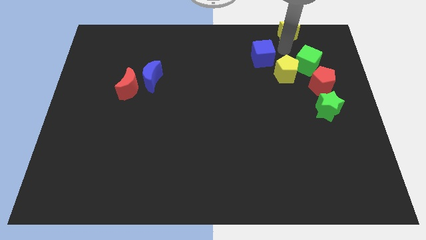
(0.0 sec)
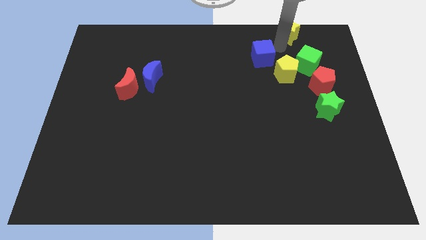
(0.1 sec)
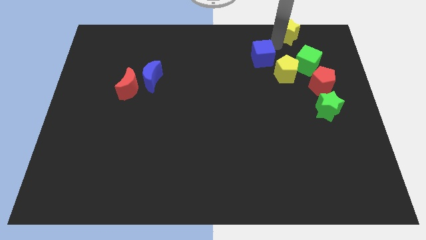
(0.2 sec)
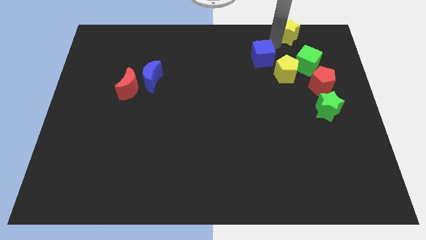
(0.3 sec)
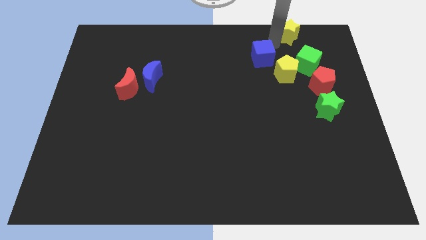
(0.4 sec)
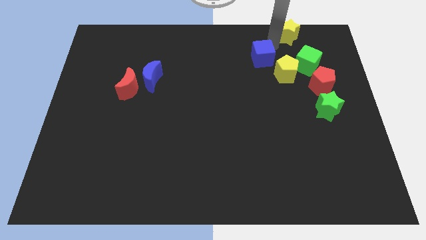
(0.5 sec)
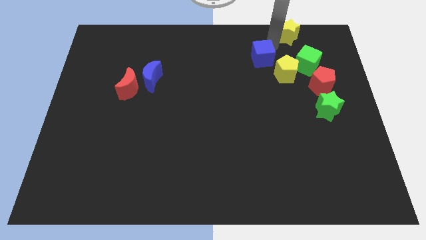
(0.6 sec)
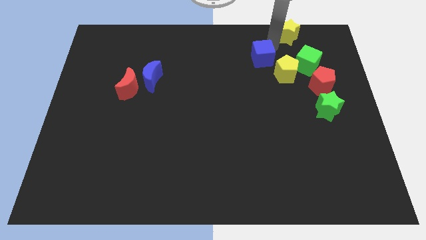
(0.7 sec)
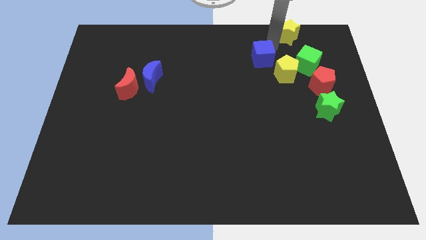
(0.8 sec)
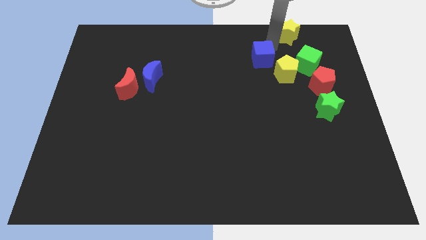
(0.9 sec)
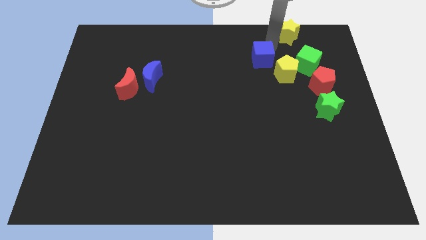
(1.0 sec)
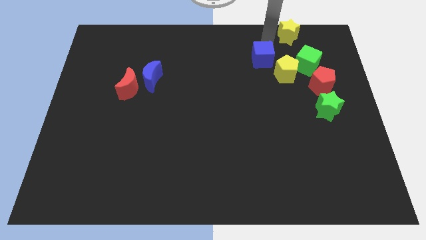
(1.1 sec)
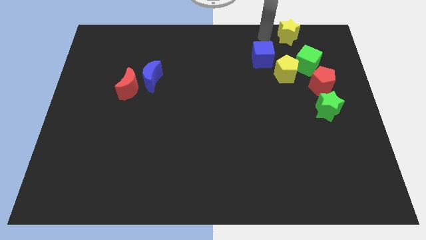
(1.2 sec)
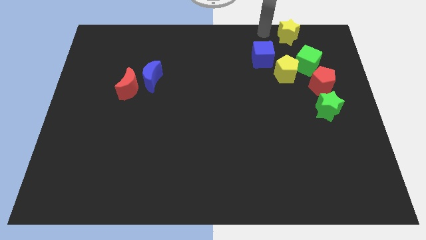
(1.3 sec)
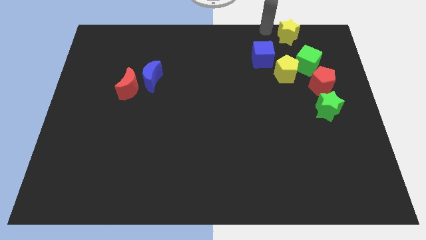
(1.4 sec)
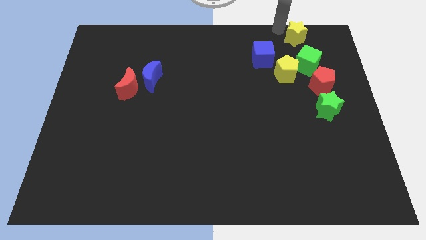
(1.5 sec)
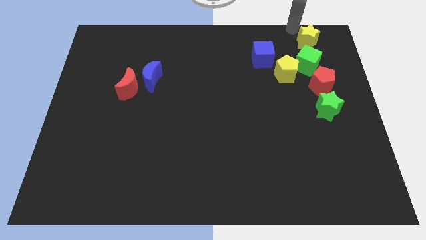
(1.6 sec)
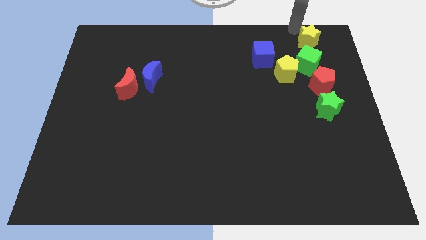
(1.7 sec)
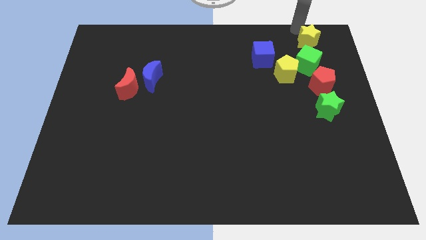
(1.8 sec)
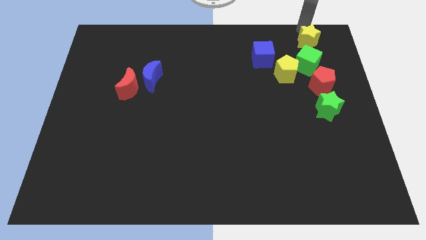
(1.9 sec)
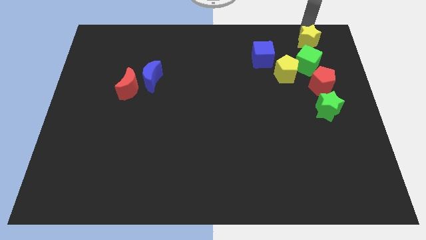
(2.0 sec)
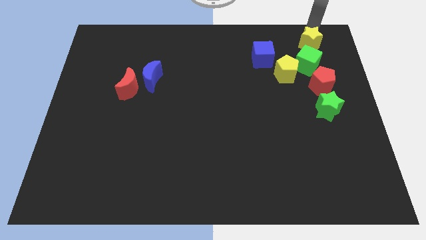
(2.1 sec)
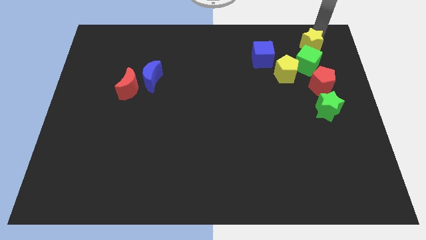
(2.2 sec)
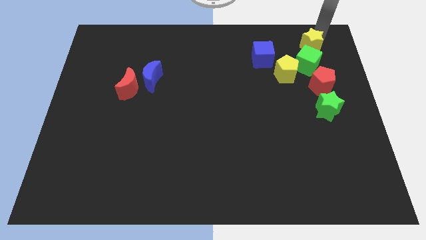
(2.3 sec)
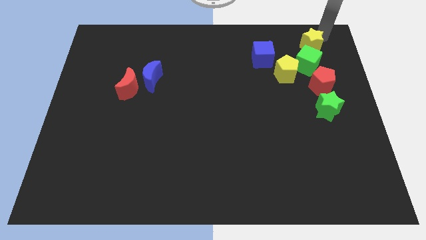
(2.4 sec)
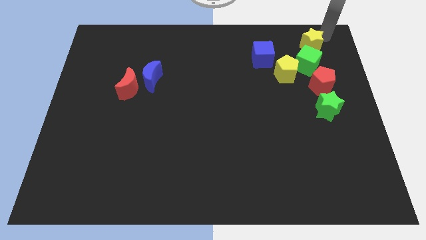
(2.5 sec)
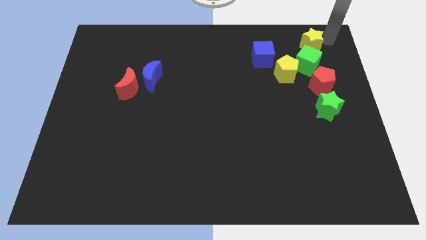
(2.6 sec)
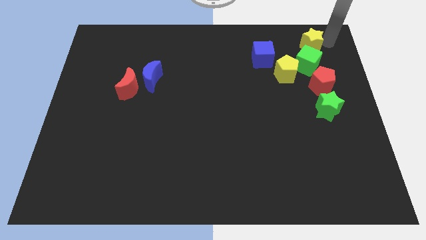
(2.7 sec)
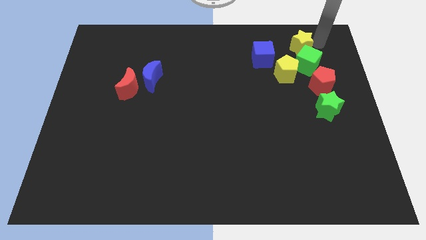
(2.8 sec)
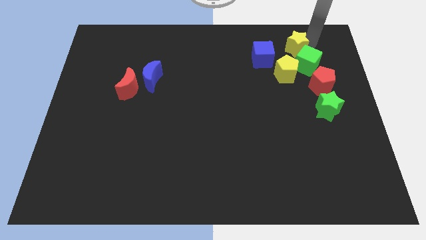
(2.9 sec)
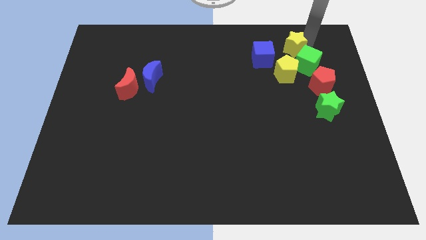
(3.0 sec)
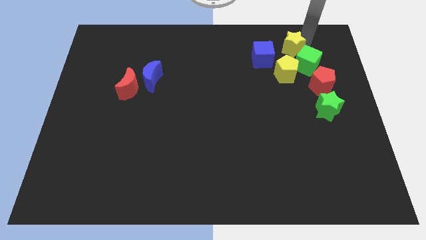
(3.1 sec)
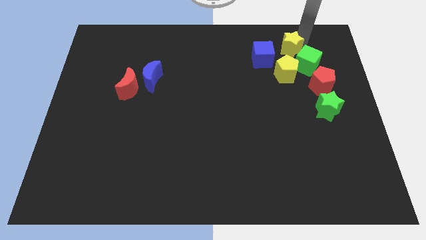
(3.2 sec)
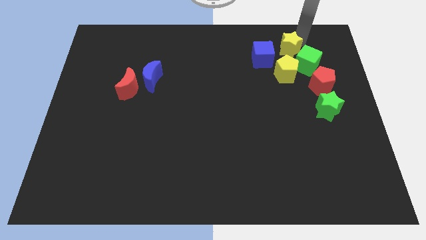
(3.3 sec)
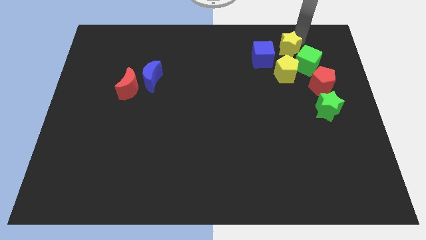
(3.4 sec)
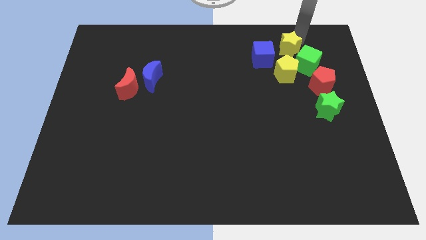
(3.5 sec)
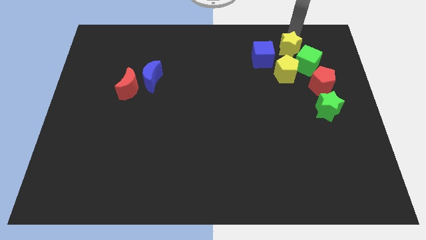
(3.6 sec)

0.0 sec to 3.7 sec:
slide the yellow star near to the yellow pentagon

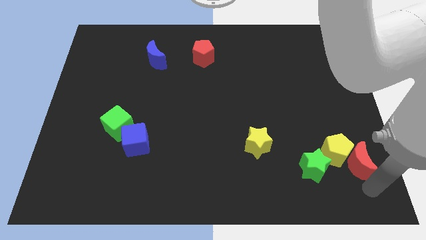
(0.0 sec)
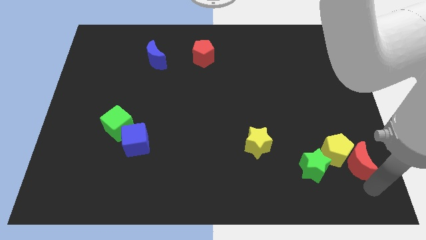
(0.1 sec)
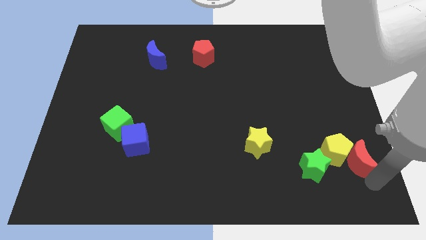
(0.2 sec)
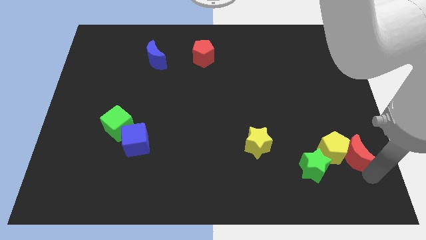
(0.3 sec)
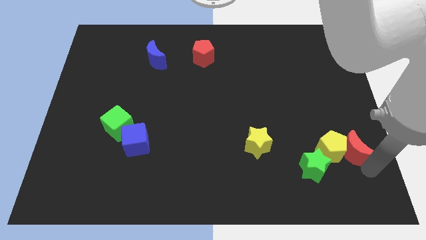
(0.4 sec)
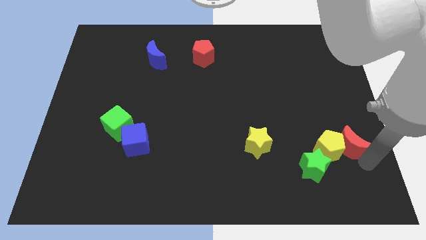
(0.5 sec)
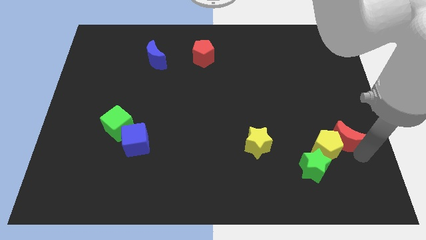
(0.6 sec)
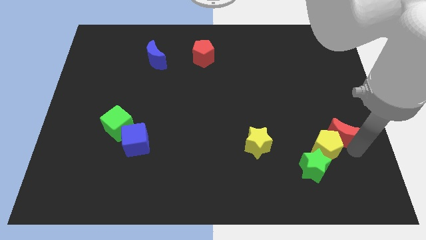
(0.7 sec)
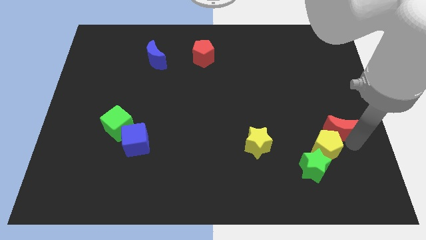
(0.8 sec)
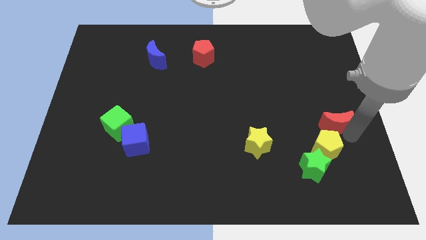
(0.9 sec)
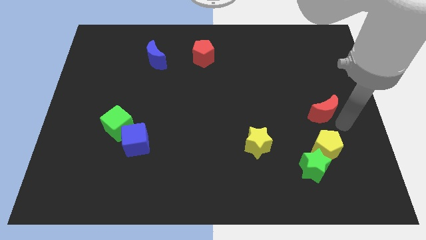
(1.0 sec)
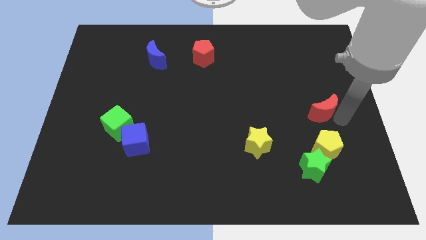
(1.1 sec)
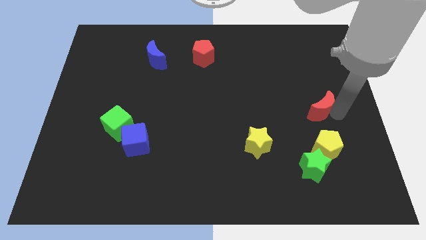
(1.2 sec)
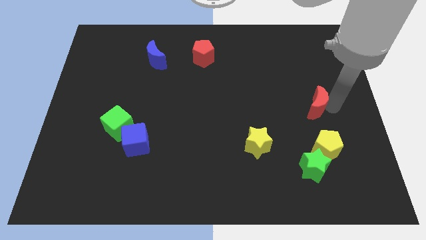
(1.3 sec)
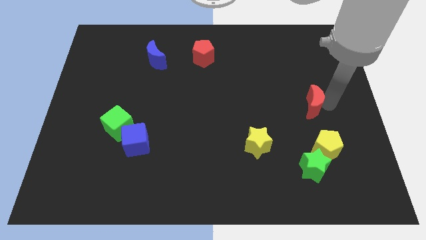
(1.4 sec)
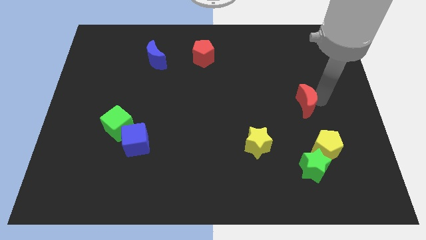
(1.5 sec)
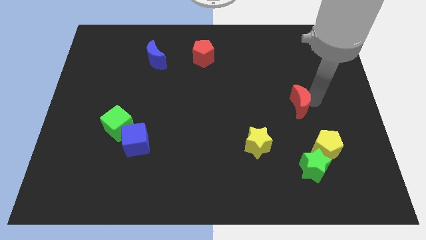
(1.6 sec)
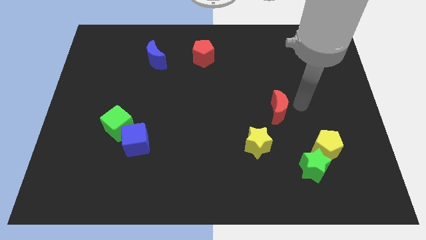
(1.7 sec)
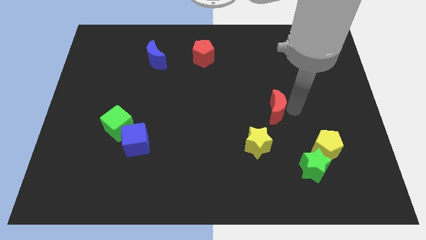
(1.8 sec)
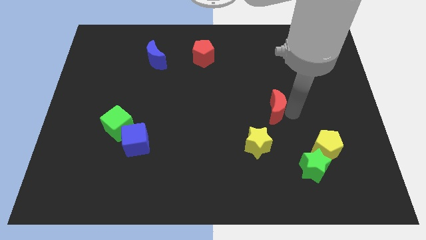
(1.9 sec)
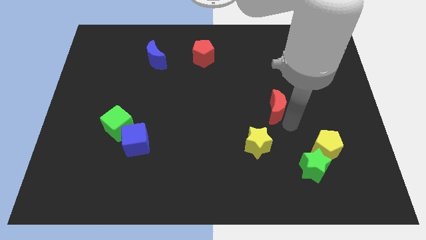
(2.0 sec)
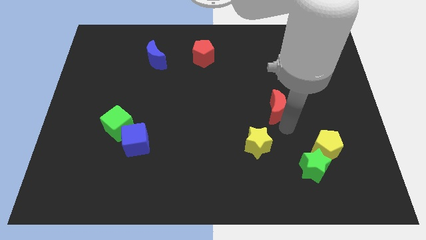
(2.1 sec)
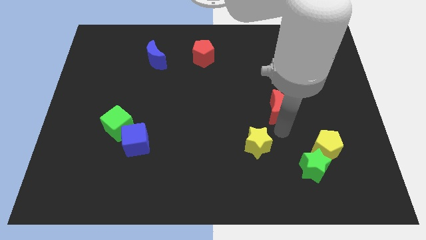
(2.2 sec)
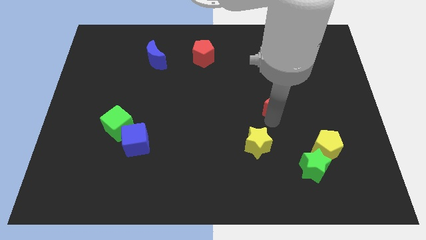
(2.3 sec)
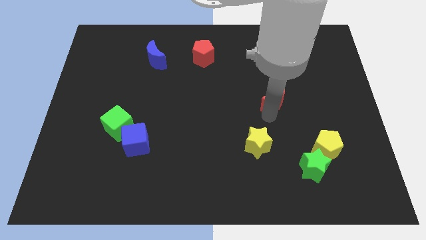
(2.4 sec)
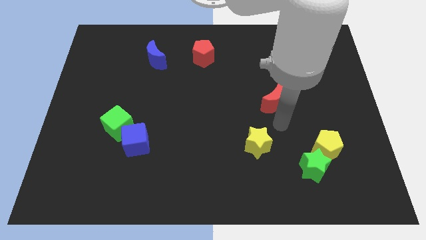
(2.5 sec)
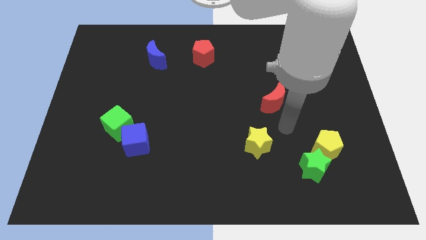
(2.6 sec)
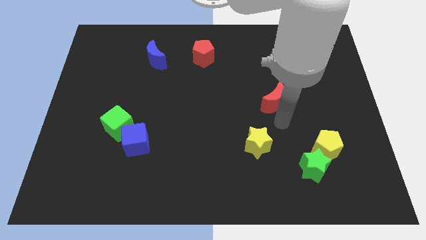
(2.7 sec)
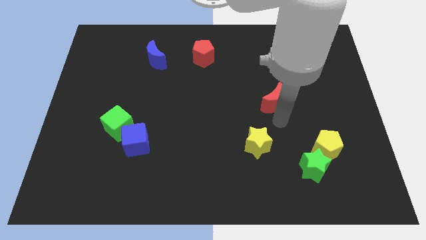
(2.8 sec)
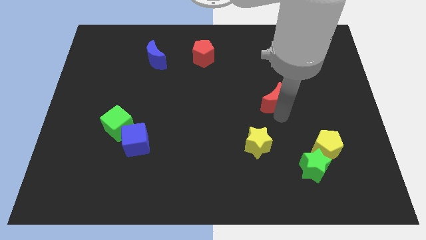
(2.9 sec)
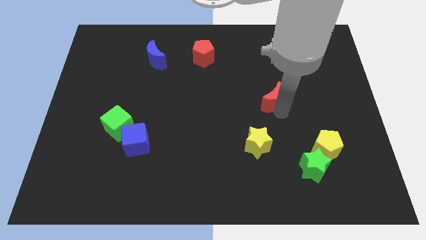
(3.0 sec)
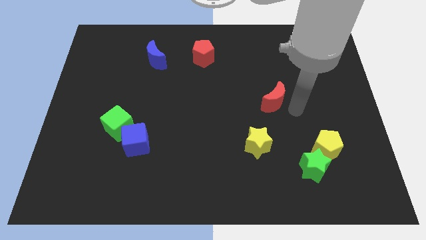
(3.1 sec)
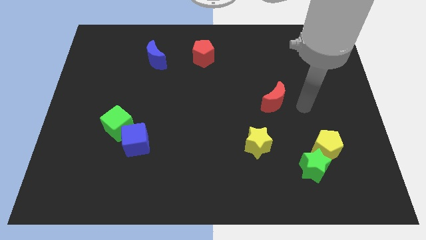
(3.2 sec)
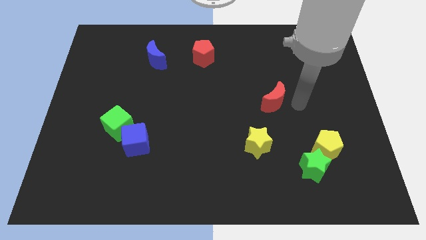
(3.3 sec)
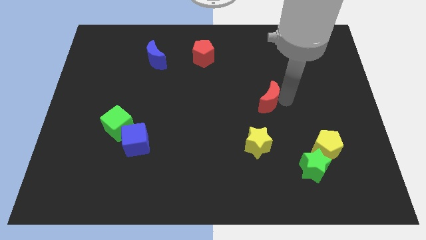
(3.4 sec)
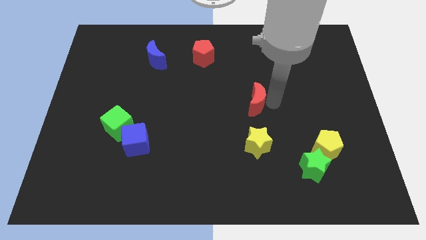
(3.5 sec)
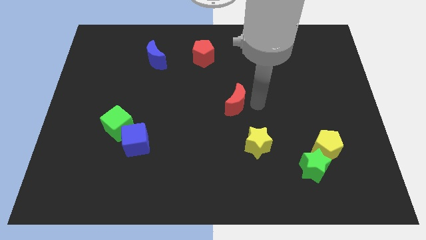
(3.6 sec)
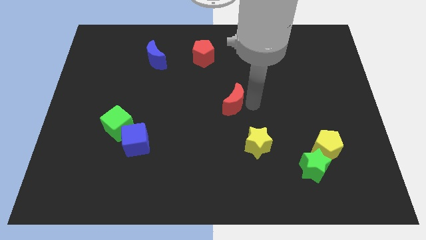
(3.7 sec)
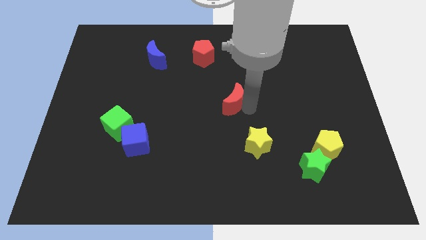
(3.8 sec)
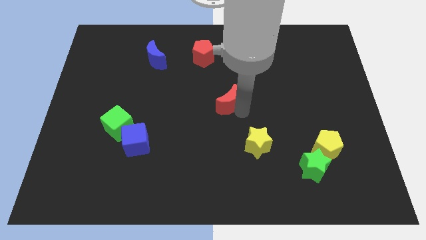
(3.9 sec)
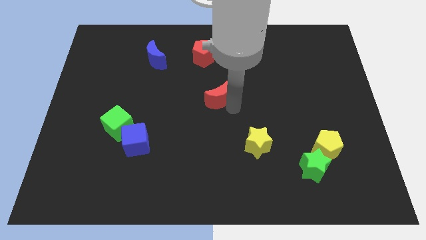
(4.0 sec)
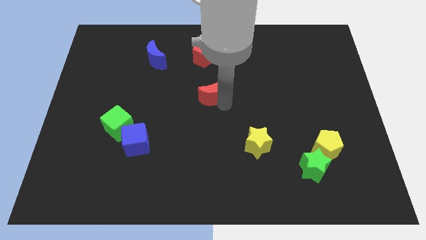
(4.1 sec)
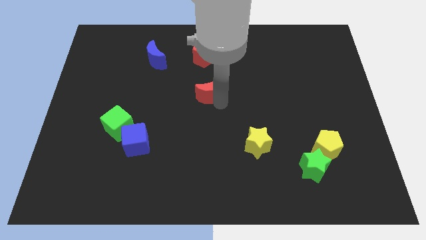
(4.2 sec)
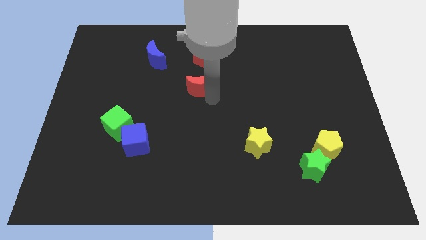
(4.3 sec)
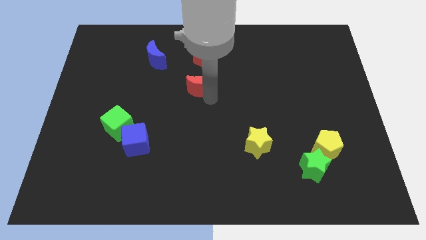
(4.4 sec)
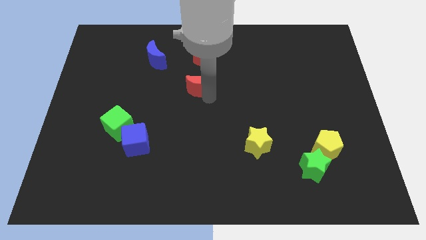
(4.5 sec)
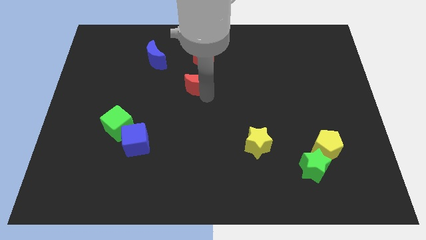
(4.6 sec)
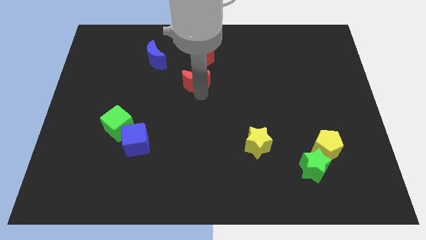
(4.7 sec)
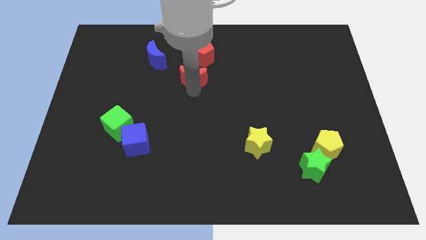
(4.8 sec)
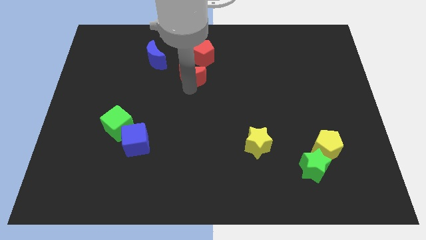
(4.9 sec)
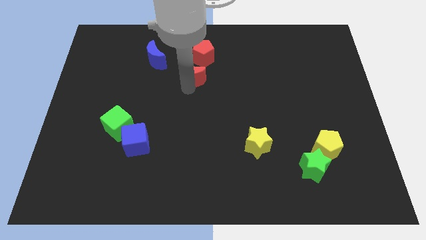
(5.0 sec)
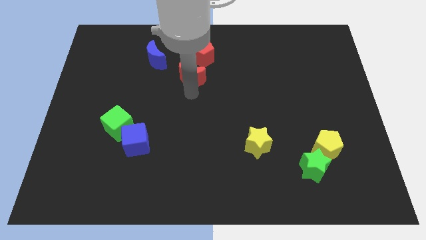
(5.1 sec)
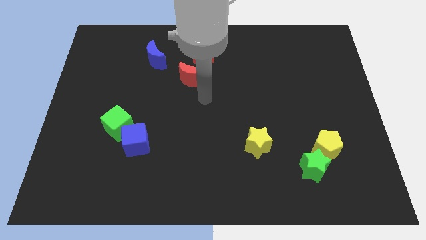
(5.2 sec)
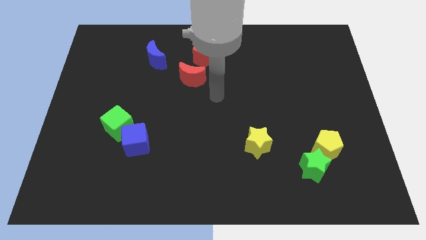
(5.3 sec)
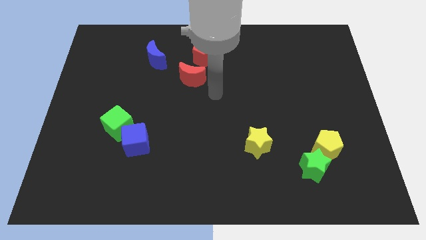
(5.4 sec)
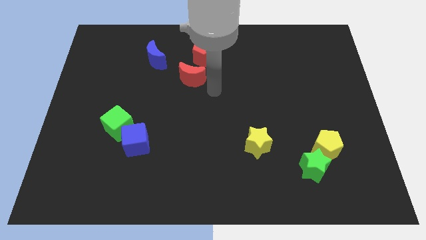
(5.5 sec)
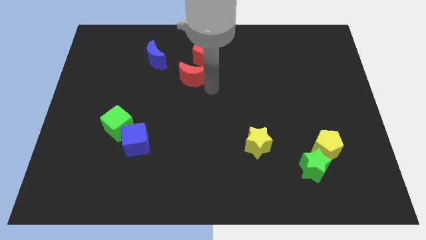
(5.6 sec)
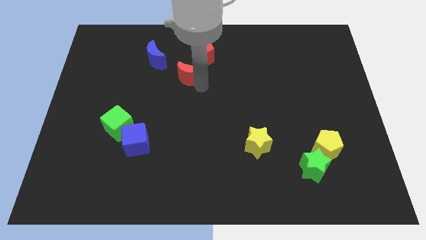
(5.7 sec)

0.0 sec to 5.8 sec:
place the red crescent below the red pentagon
